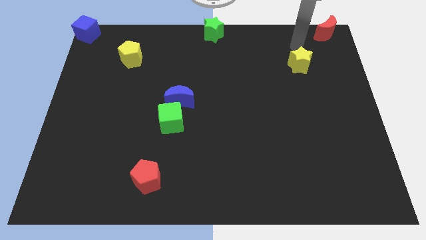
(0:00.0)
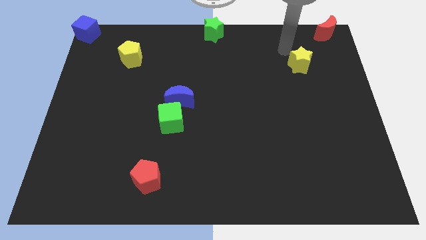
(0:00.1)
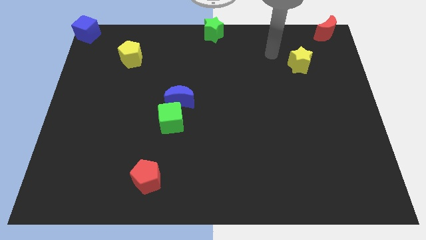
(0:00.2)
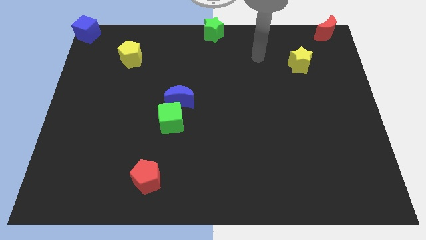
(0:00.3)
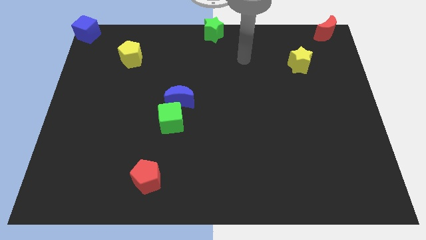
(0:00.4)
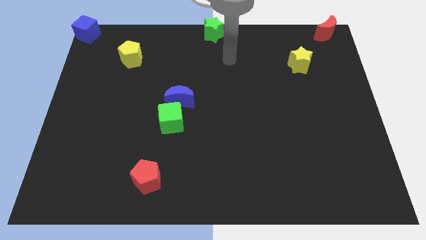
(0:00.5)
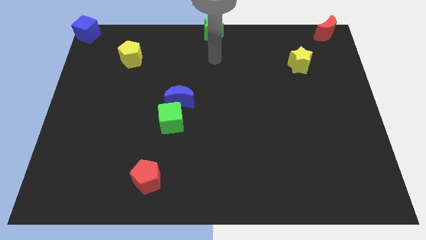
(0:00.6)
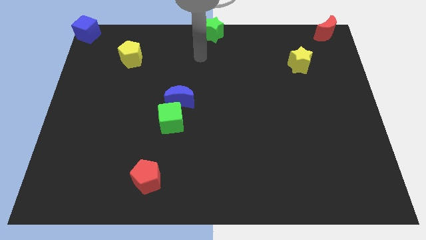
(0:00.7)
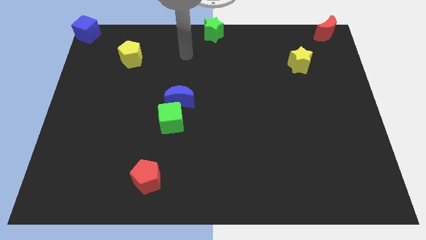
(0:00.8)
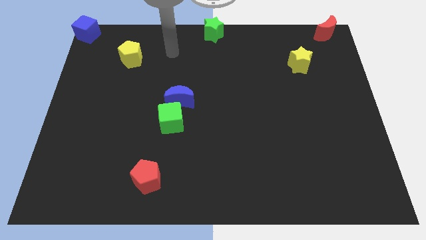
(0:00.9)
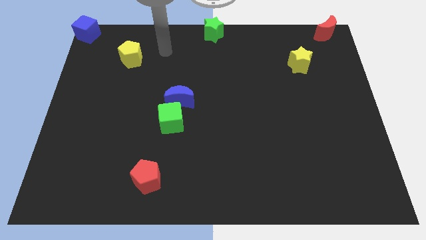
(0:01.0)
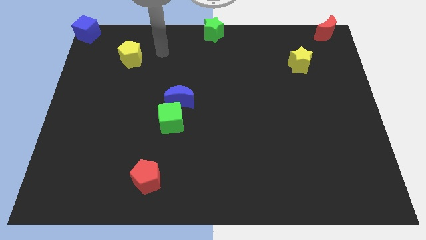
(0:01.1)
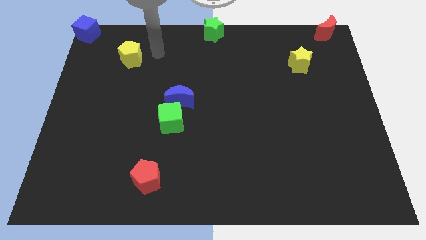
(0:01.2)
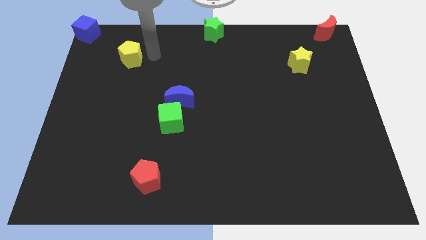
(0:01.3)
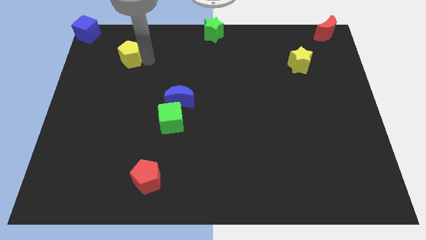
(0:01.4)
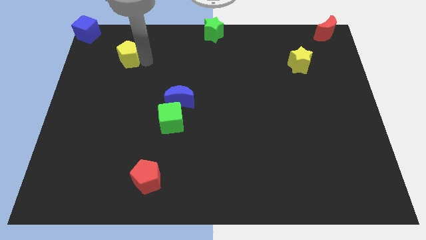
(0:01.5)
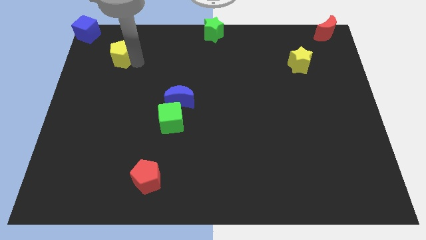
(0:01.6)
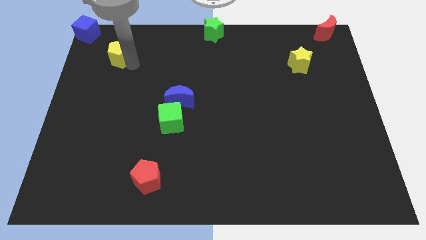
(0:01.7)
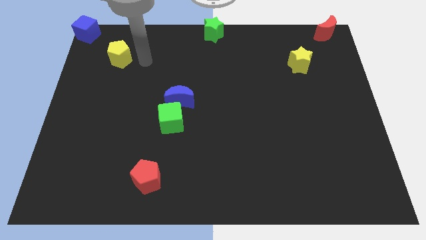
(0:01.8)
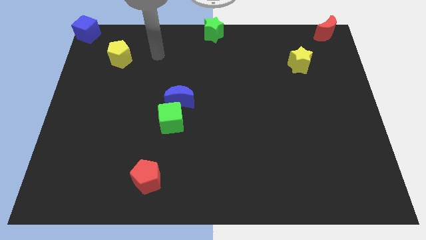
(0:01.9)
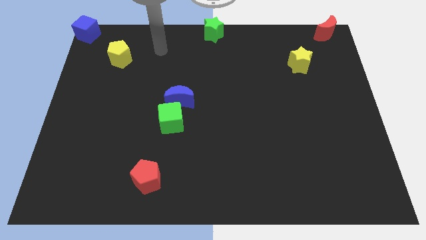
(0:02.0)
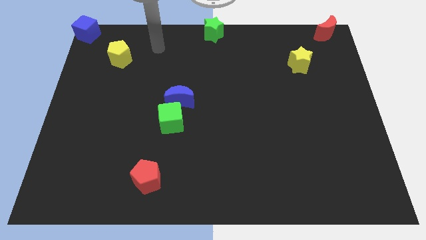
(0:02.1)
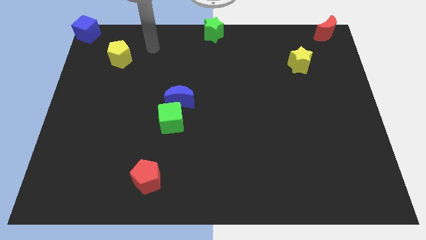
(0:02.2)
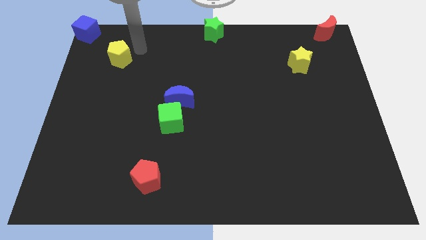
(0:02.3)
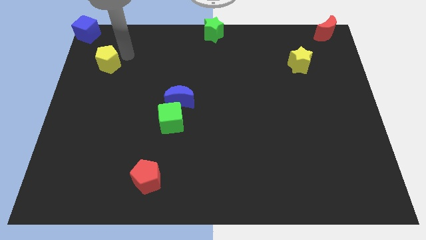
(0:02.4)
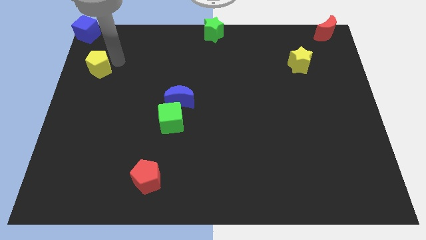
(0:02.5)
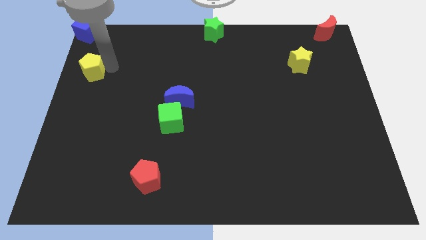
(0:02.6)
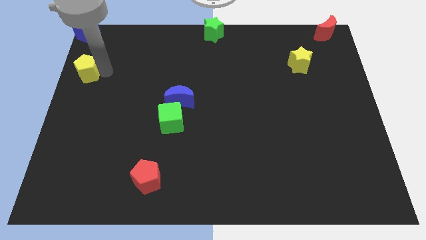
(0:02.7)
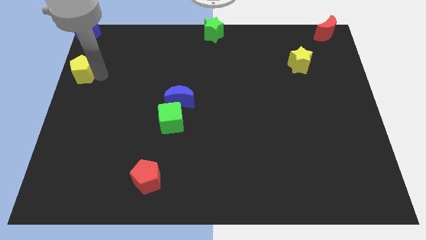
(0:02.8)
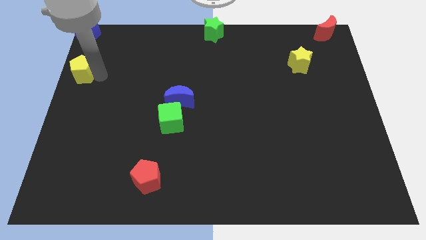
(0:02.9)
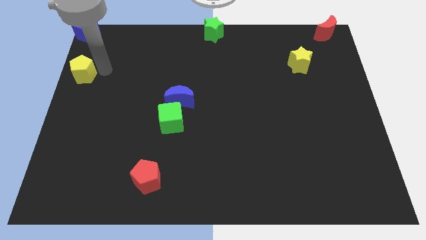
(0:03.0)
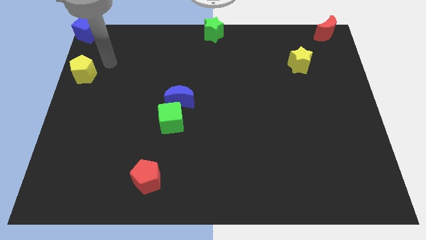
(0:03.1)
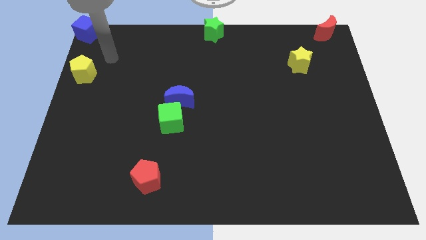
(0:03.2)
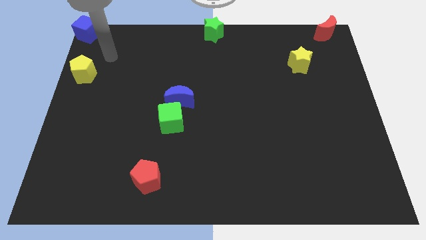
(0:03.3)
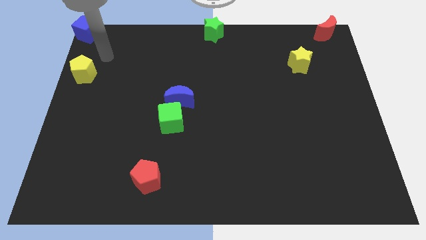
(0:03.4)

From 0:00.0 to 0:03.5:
push the yellow pentagon to the left side of the board

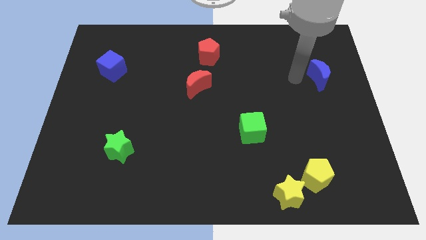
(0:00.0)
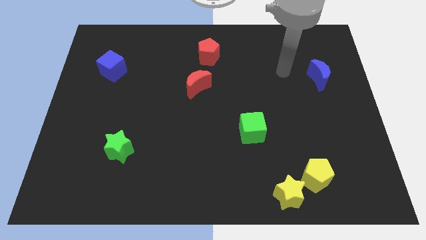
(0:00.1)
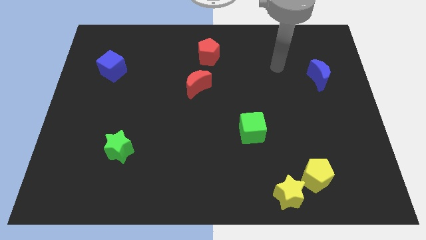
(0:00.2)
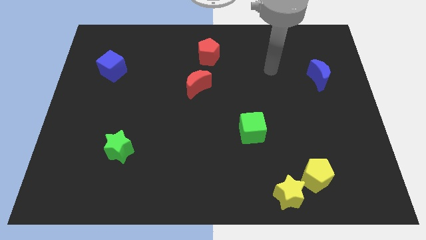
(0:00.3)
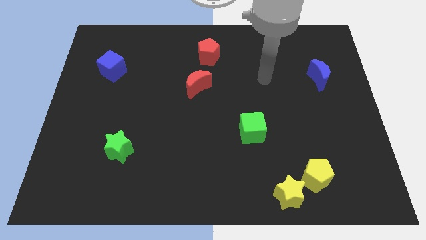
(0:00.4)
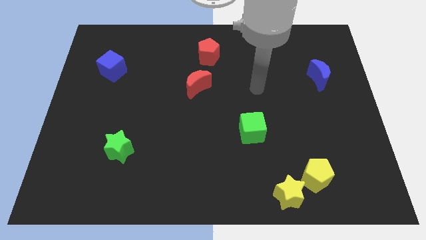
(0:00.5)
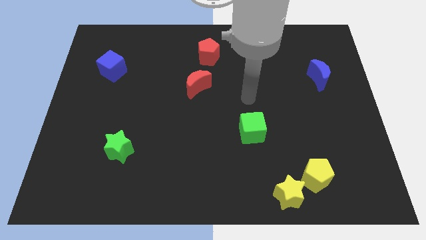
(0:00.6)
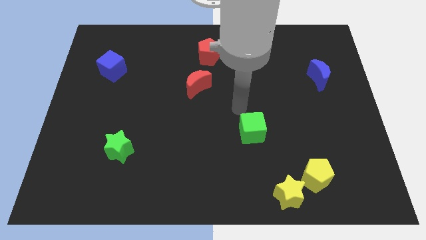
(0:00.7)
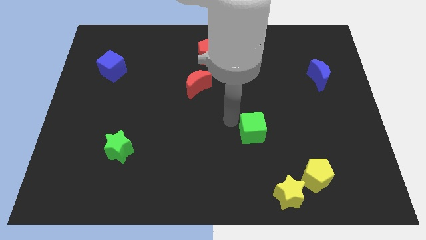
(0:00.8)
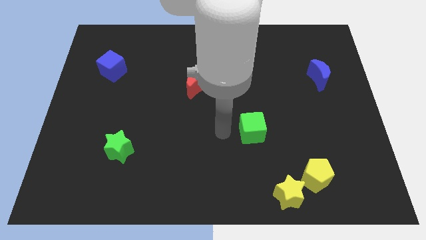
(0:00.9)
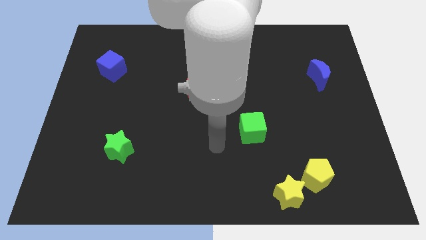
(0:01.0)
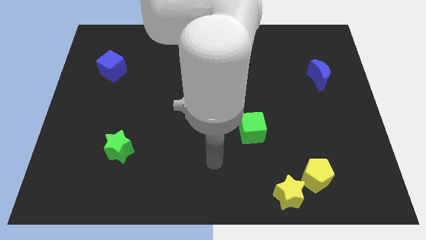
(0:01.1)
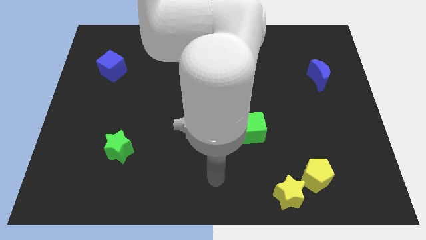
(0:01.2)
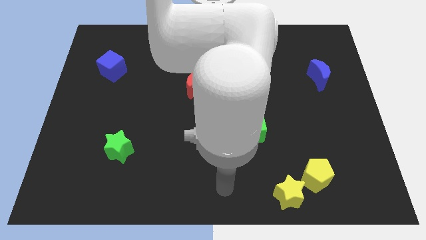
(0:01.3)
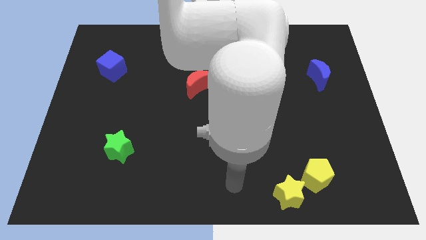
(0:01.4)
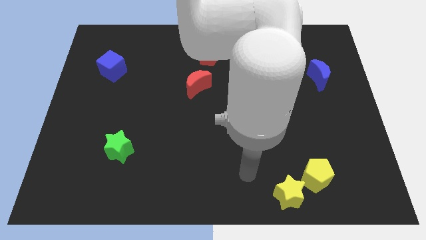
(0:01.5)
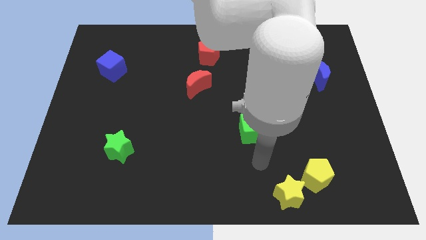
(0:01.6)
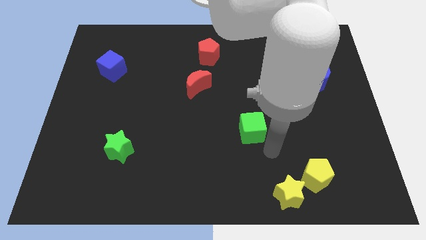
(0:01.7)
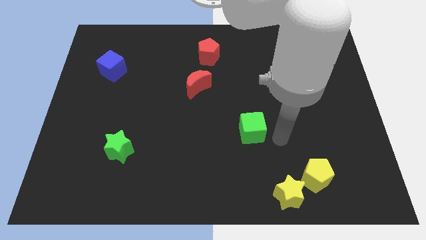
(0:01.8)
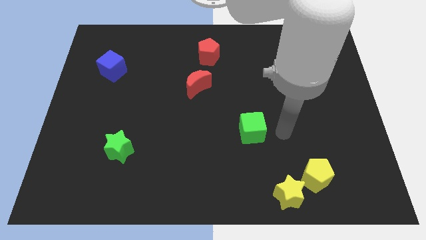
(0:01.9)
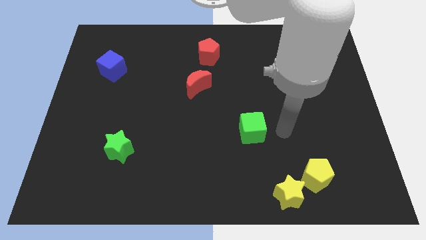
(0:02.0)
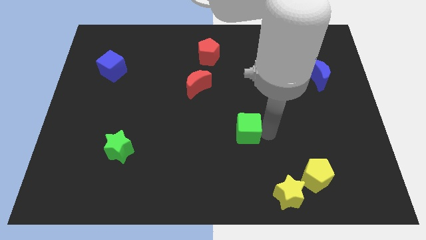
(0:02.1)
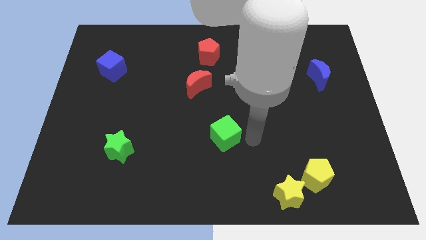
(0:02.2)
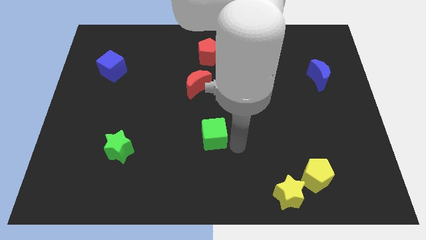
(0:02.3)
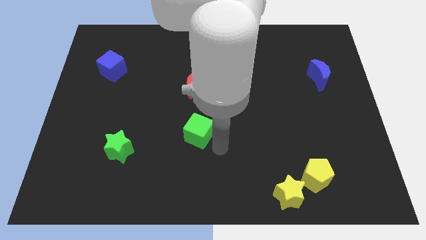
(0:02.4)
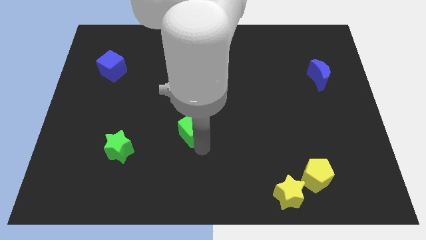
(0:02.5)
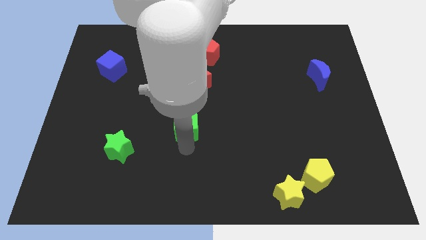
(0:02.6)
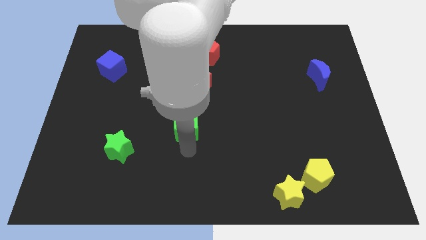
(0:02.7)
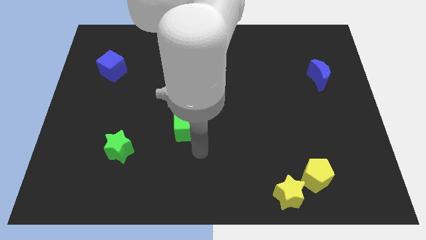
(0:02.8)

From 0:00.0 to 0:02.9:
push the green cube to the left

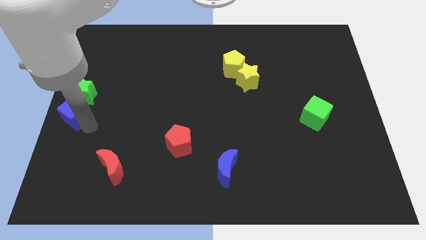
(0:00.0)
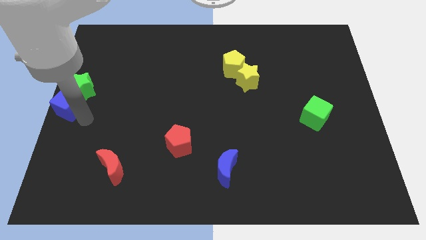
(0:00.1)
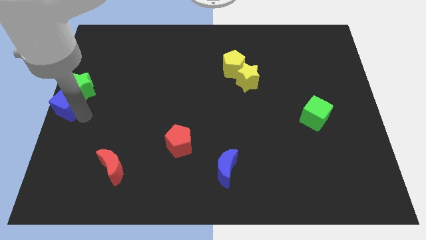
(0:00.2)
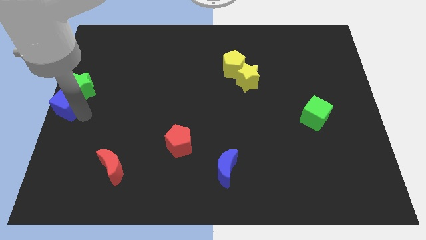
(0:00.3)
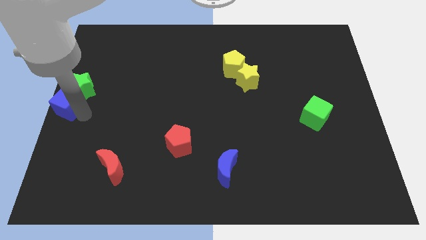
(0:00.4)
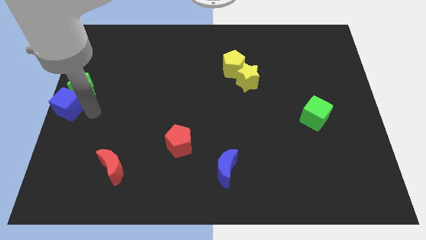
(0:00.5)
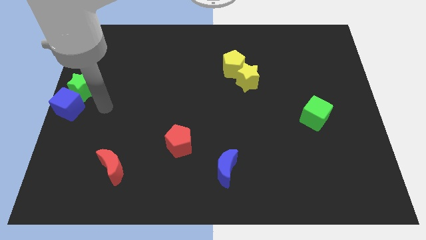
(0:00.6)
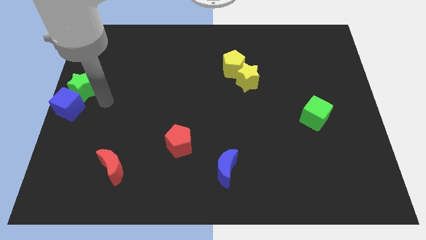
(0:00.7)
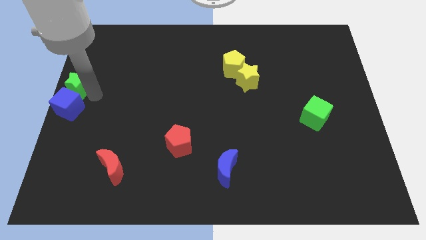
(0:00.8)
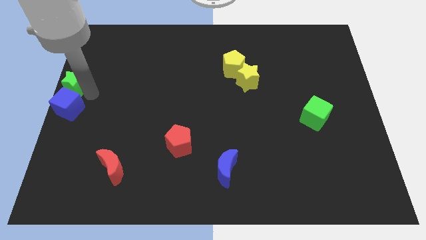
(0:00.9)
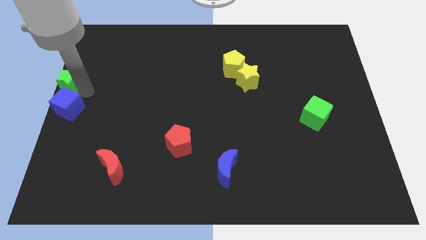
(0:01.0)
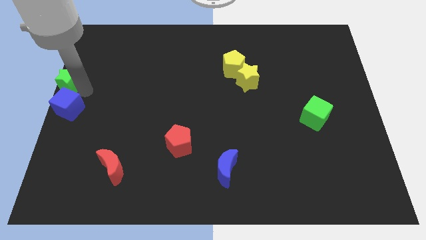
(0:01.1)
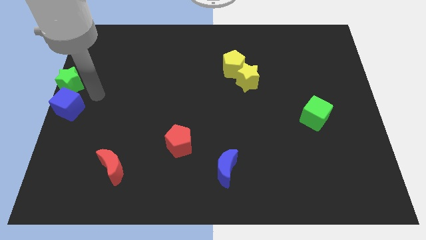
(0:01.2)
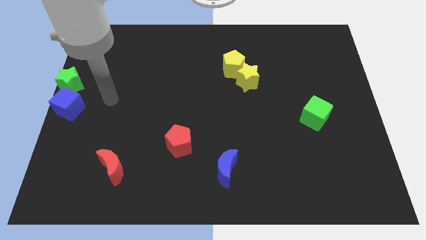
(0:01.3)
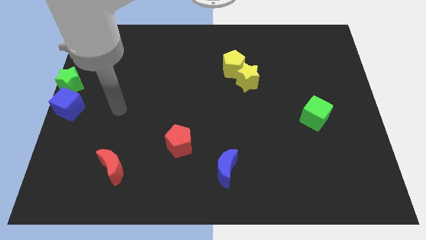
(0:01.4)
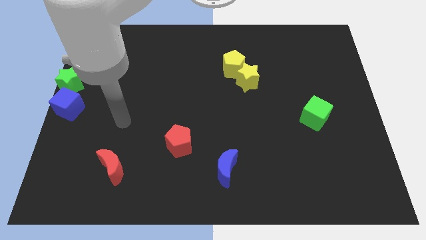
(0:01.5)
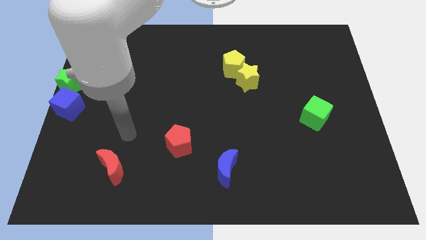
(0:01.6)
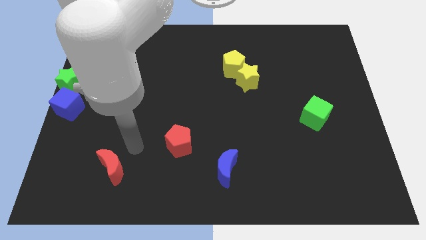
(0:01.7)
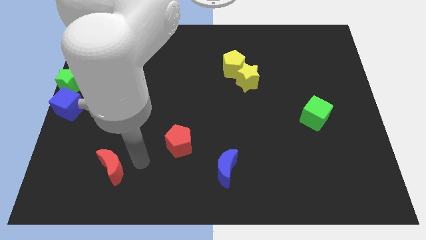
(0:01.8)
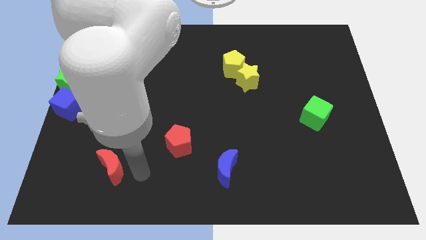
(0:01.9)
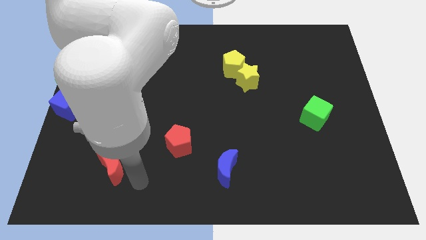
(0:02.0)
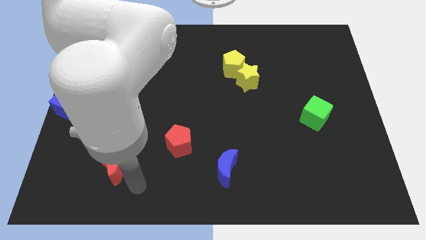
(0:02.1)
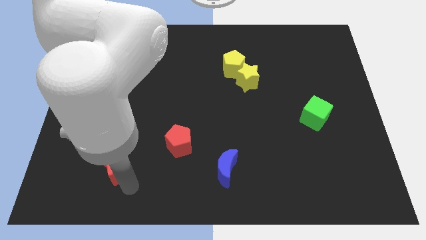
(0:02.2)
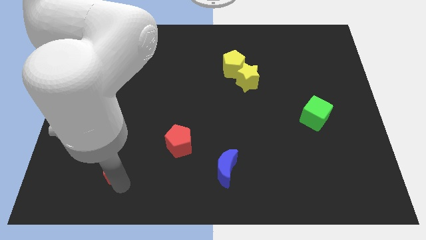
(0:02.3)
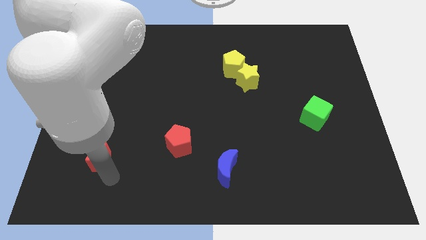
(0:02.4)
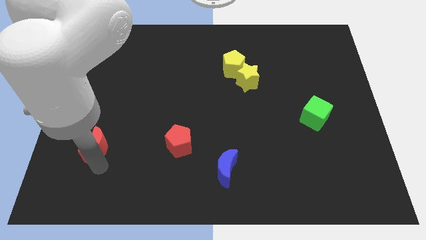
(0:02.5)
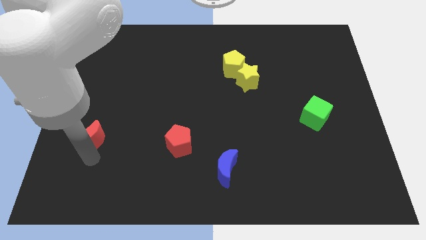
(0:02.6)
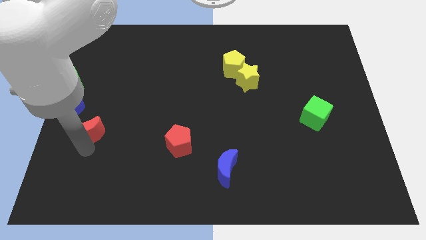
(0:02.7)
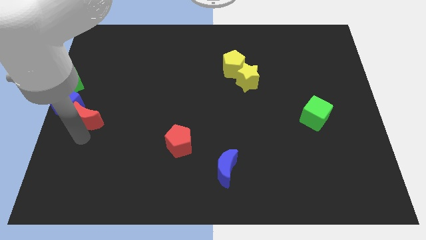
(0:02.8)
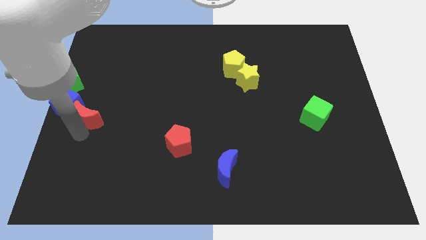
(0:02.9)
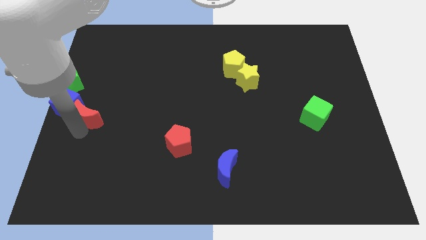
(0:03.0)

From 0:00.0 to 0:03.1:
move the red moon into the blue cube
